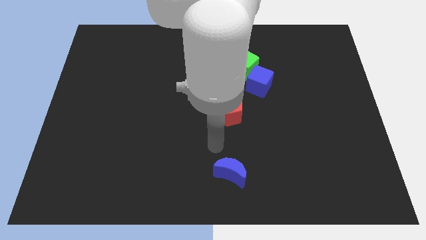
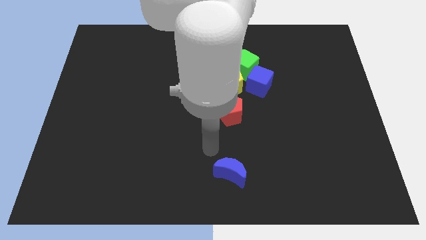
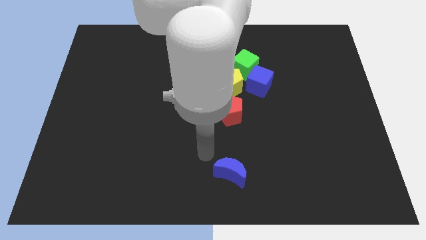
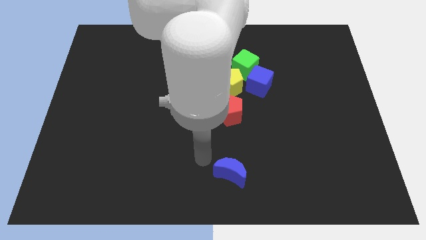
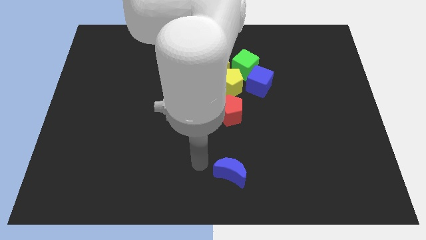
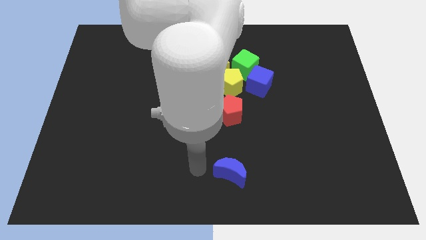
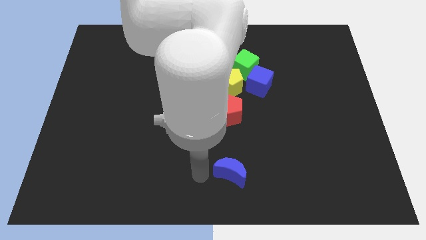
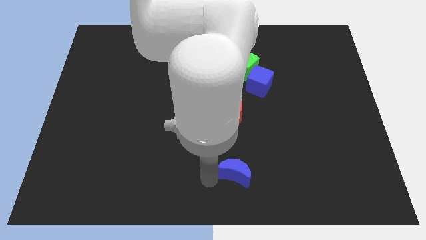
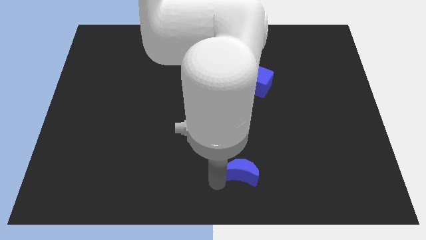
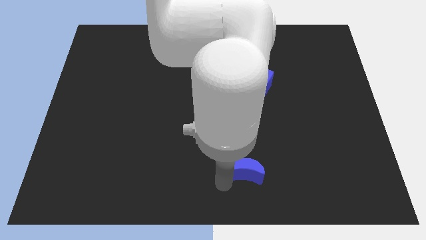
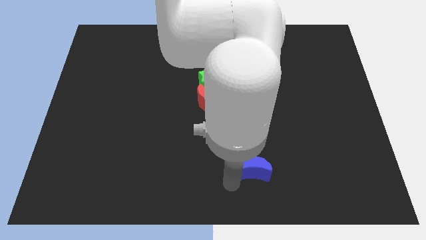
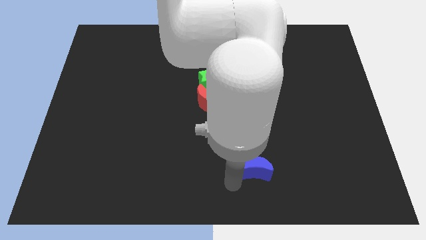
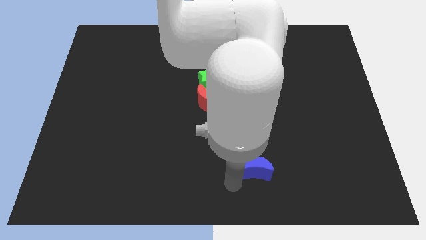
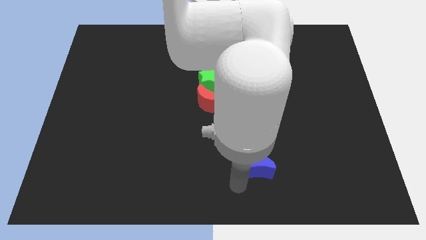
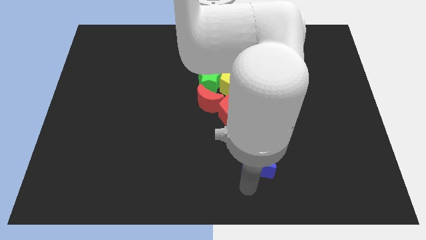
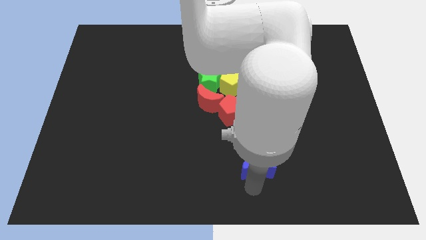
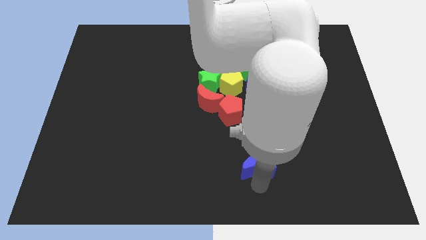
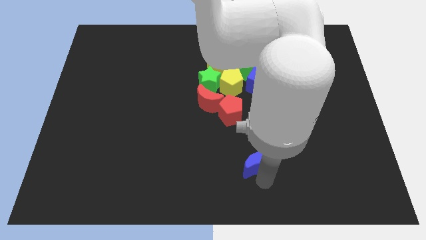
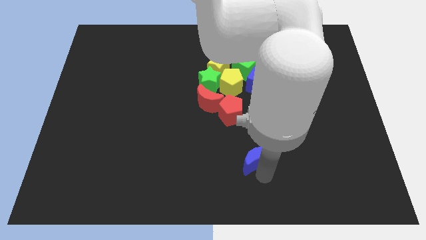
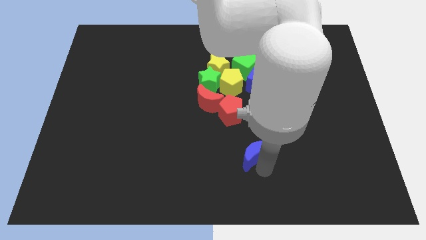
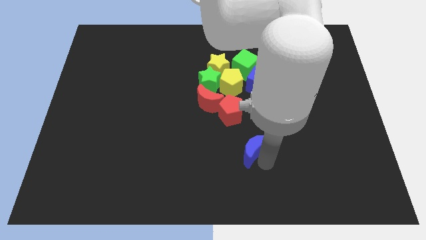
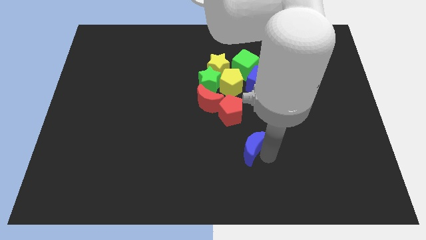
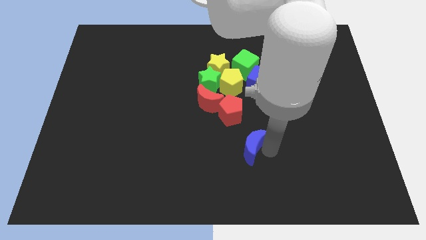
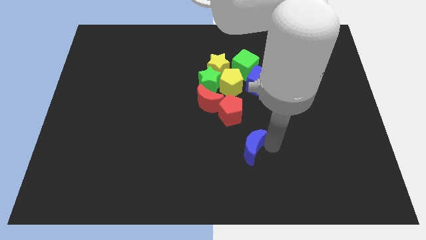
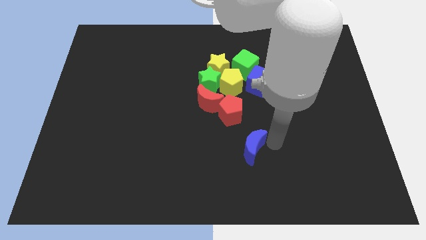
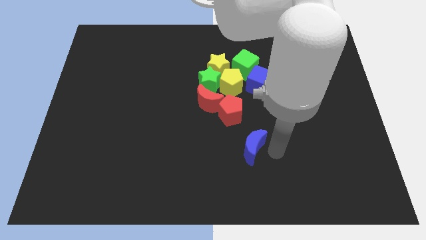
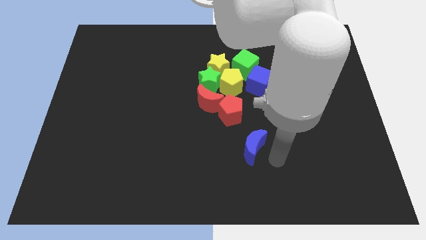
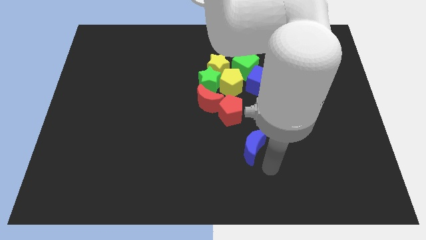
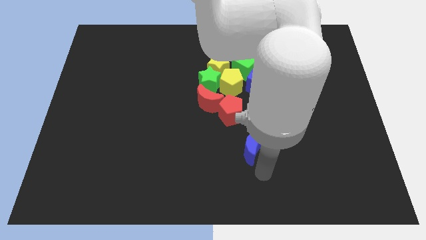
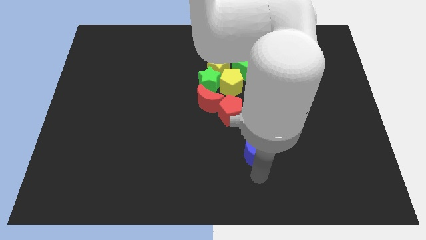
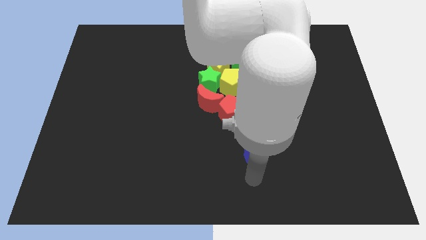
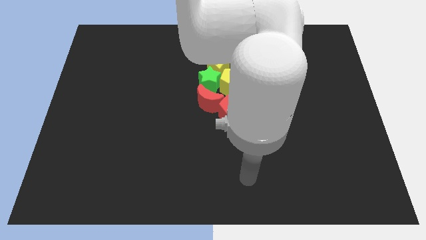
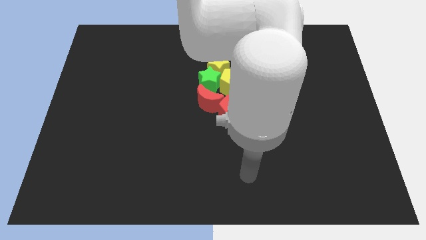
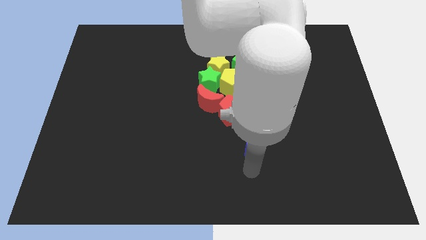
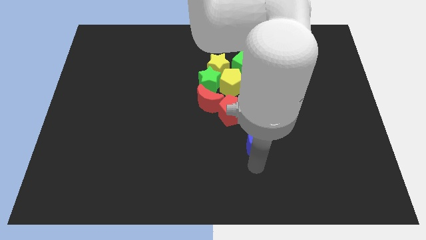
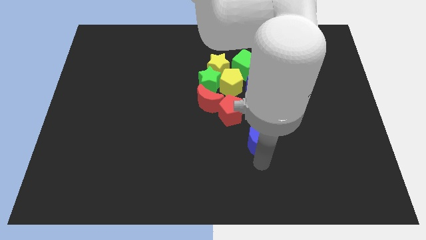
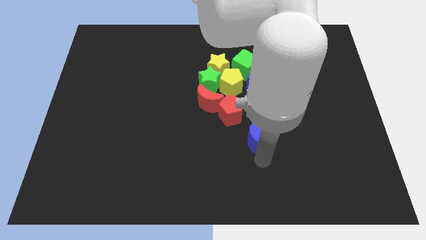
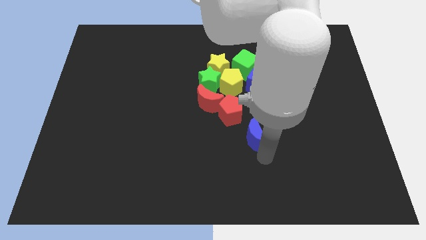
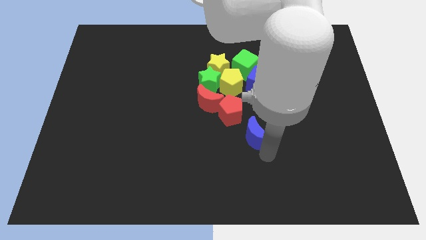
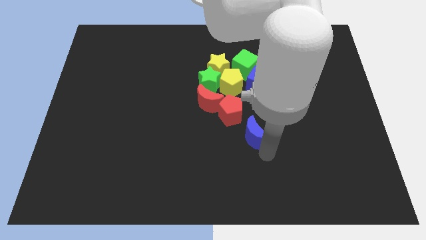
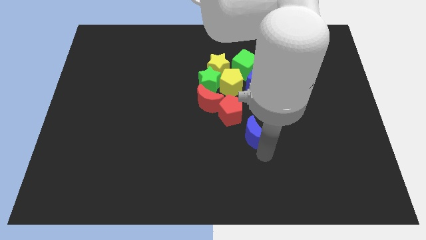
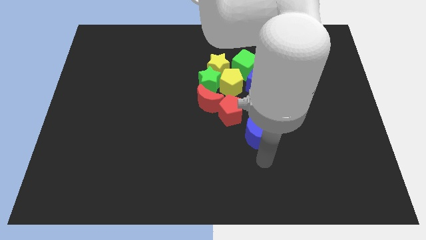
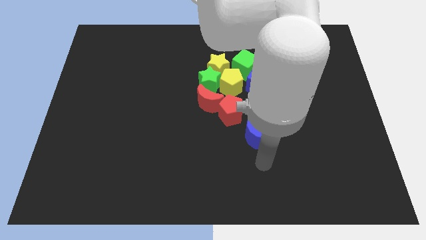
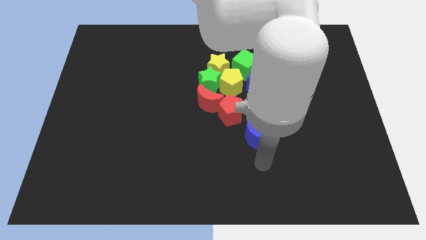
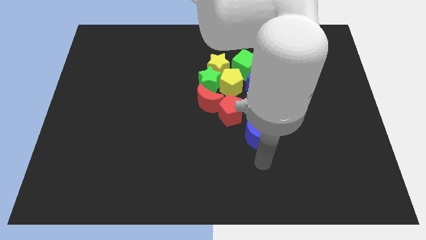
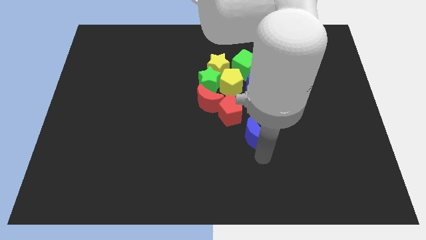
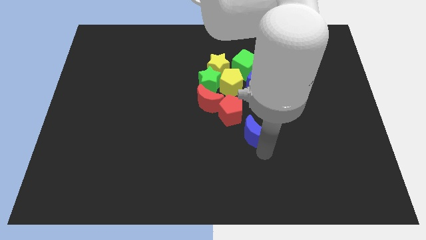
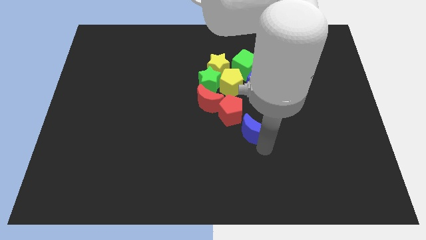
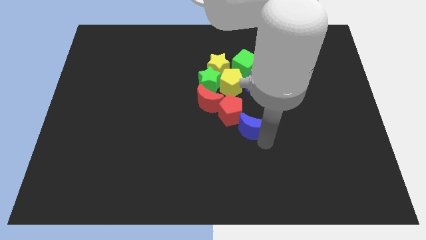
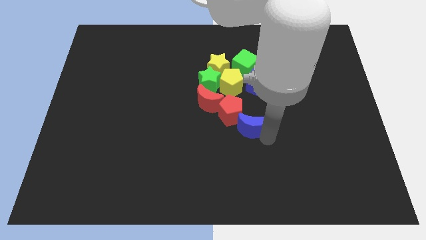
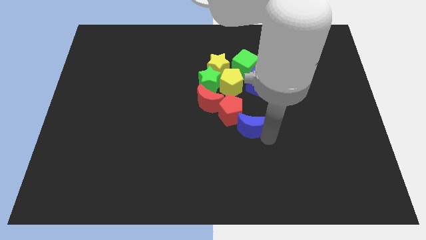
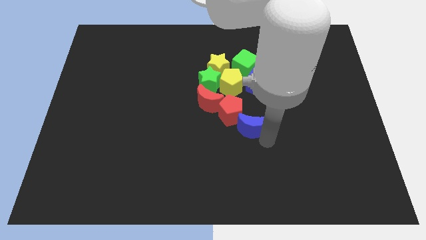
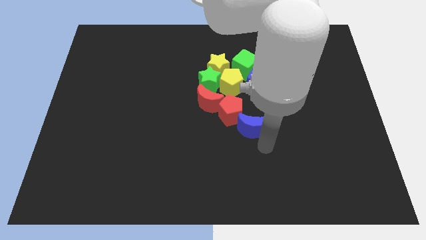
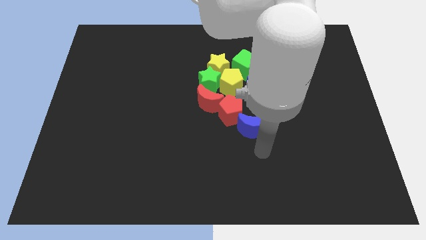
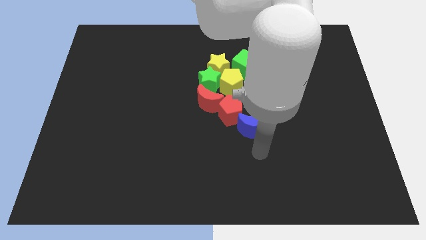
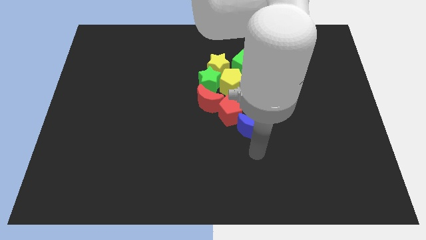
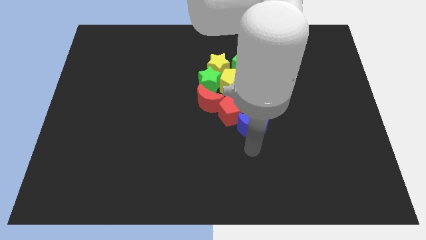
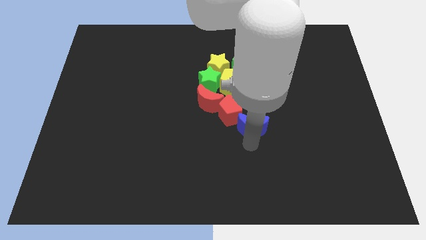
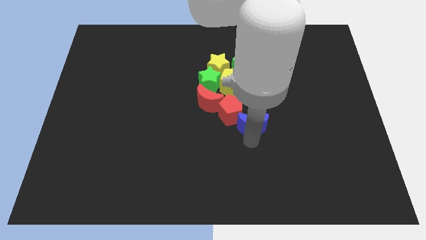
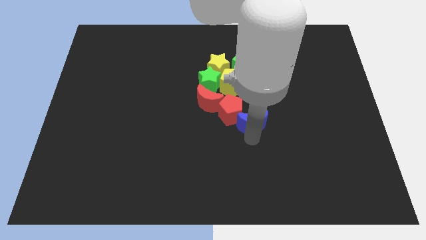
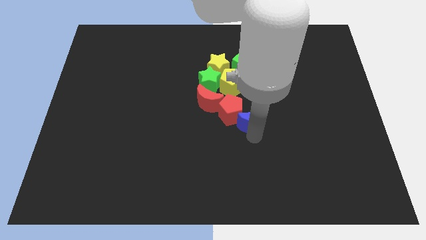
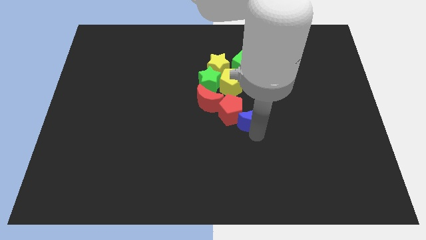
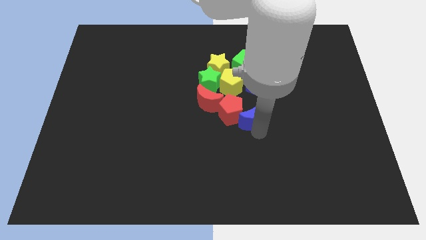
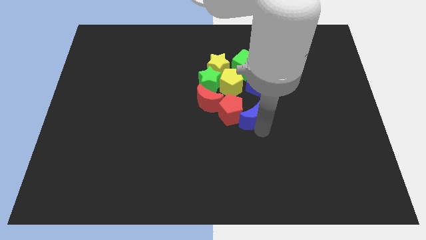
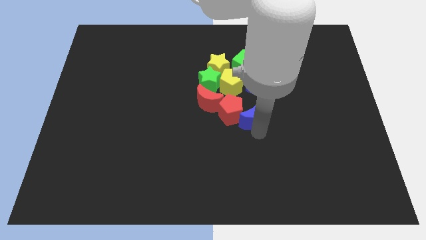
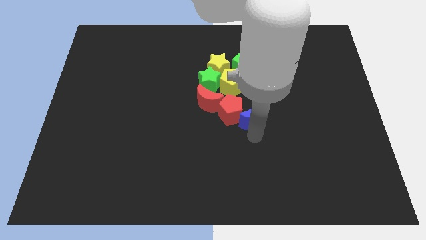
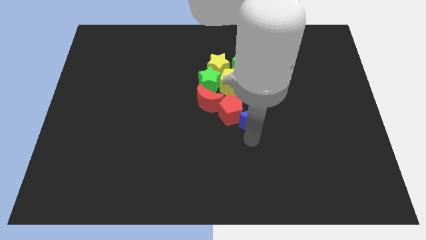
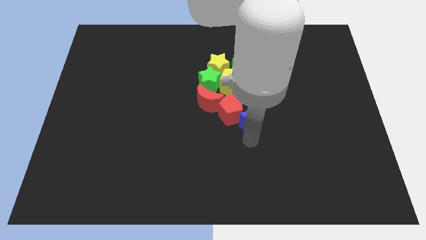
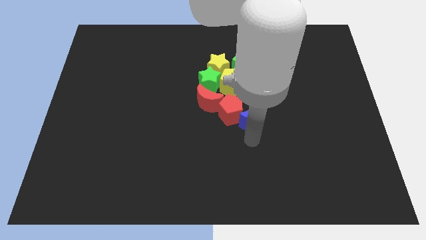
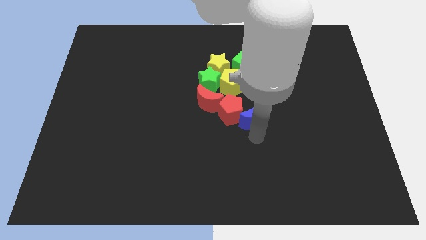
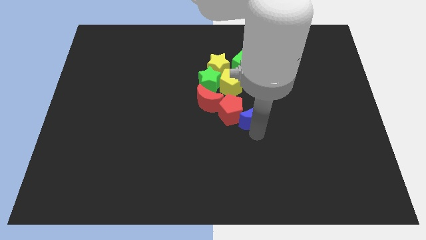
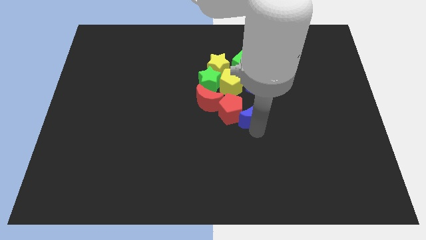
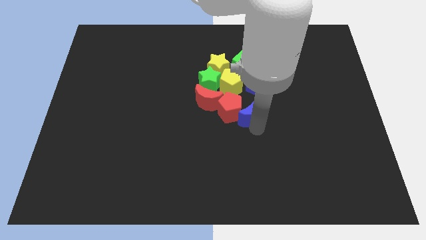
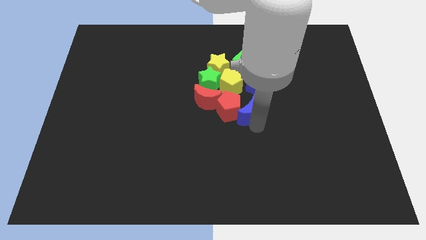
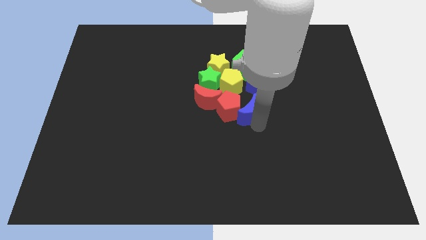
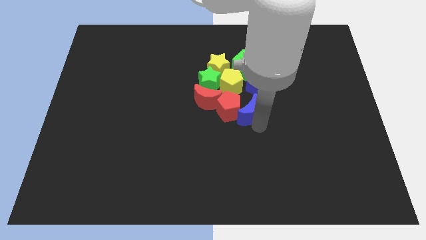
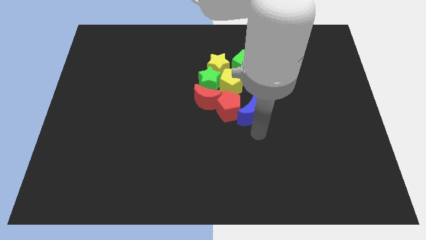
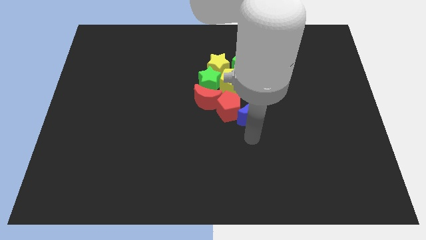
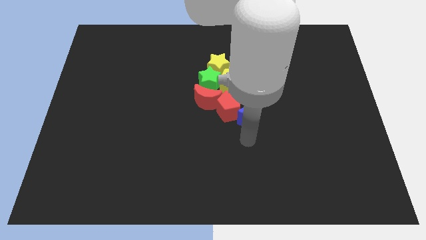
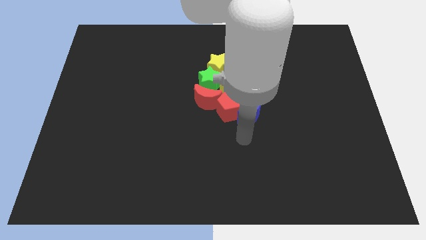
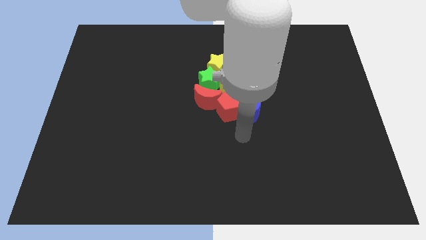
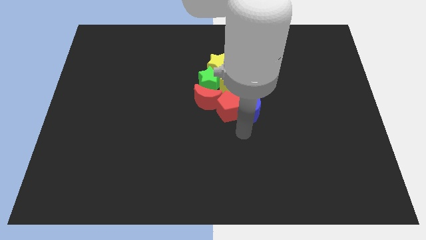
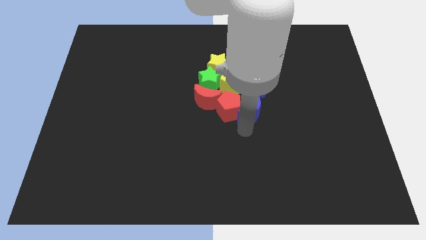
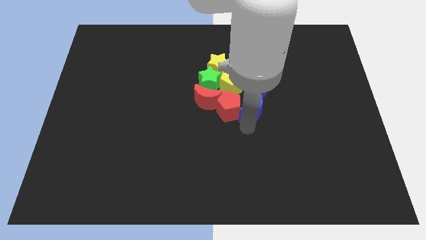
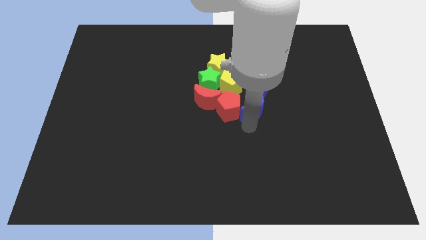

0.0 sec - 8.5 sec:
move the blue crescent into group of blocks

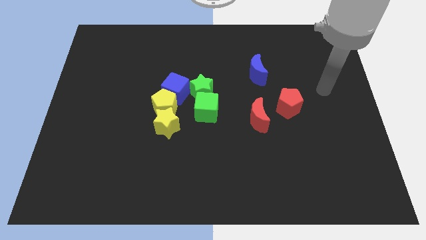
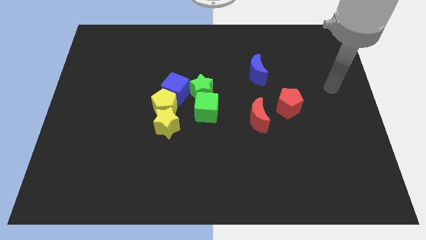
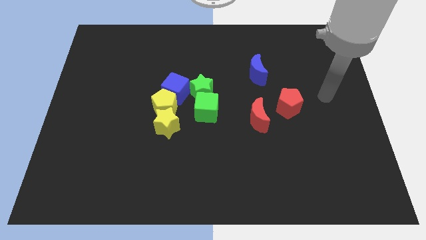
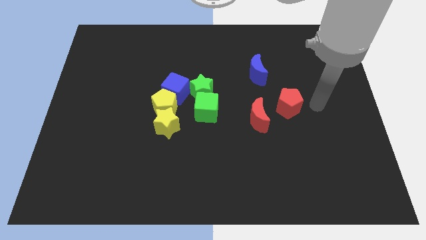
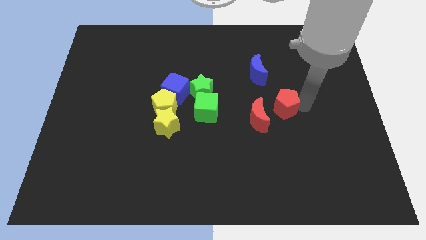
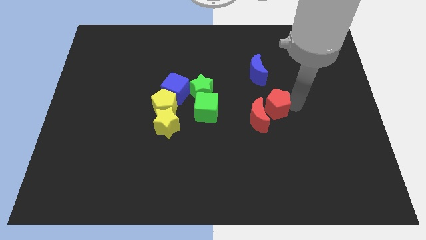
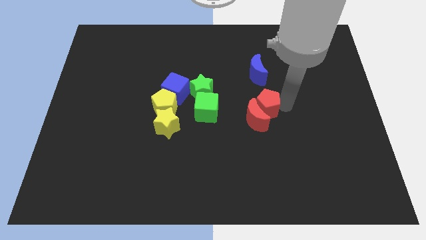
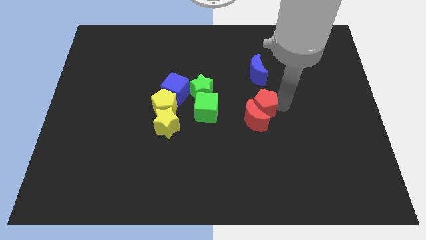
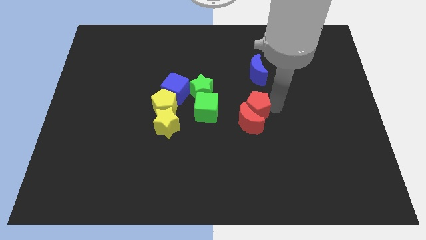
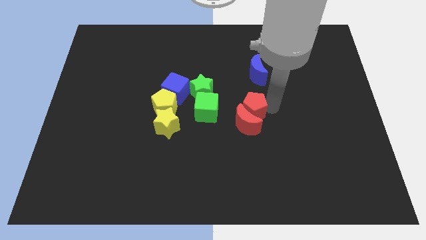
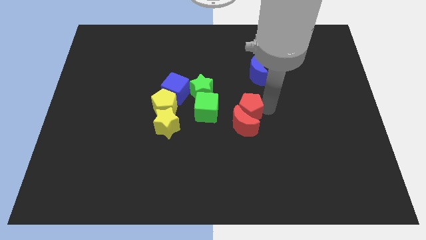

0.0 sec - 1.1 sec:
push red pentagon into red moon
